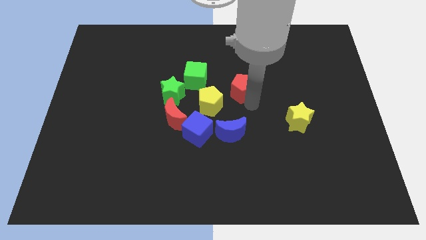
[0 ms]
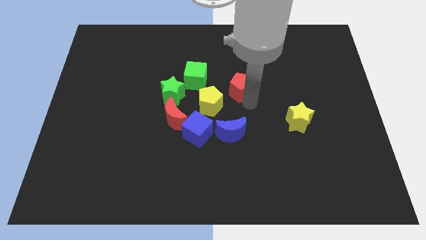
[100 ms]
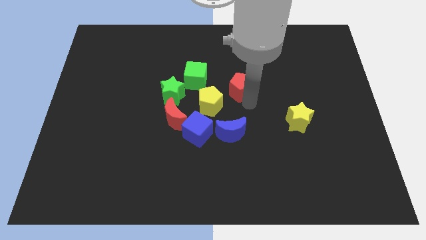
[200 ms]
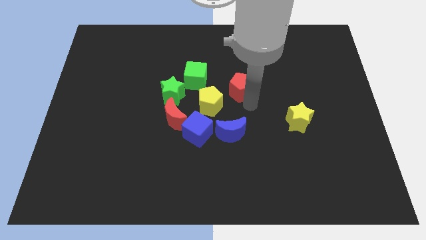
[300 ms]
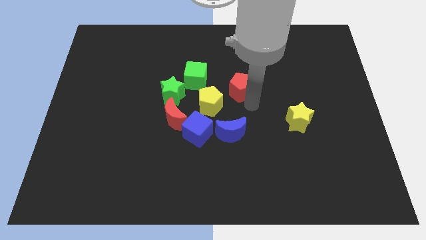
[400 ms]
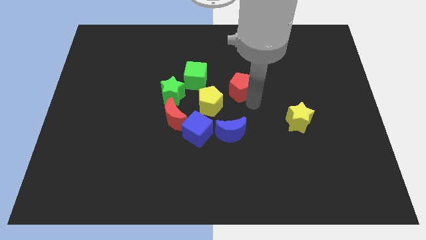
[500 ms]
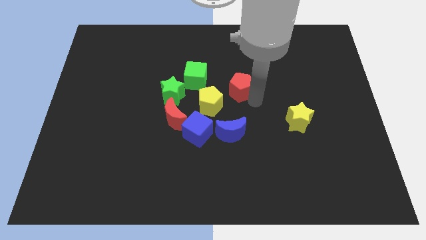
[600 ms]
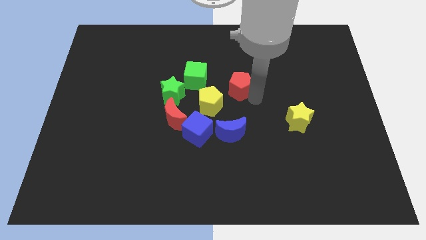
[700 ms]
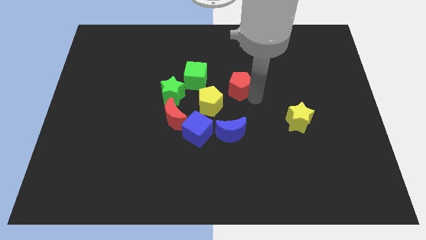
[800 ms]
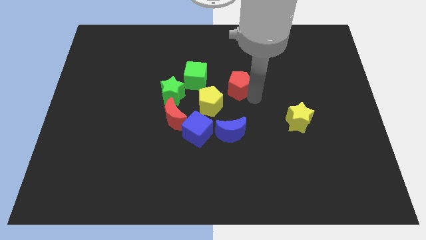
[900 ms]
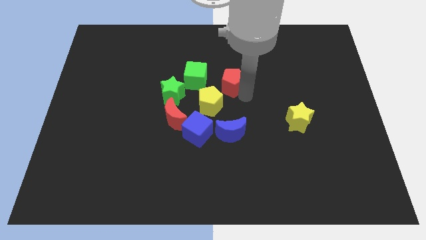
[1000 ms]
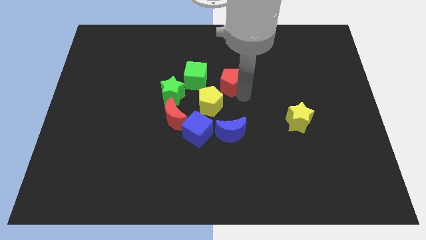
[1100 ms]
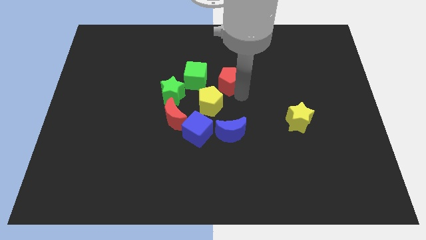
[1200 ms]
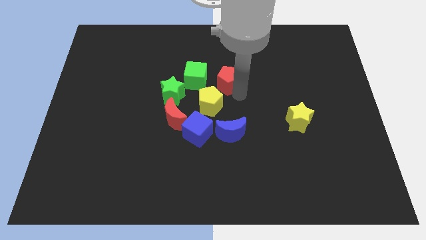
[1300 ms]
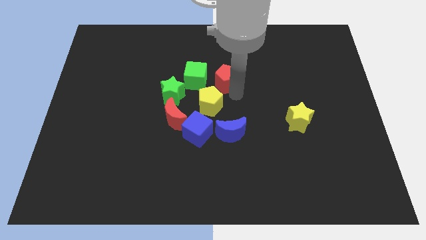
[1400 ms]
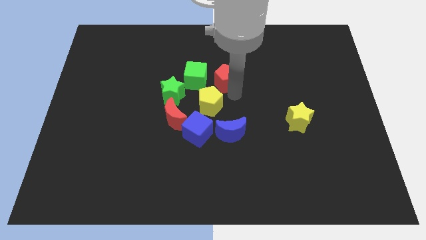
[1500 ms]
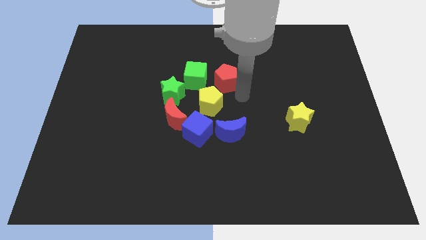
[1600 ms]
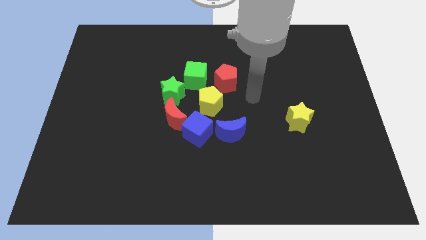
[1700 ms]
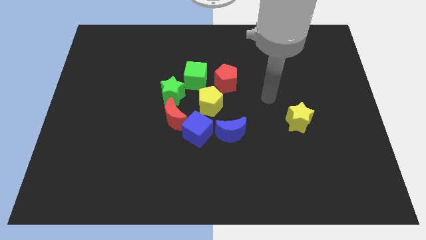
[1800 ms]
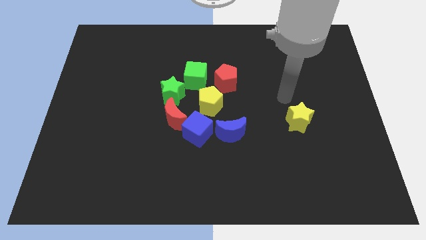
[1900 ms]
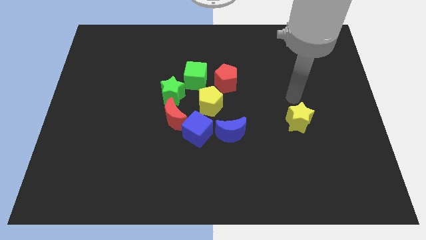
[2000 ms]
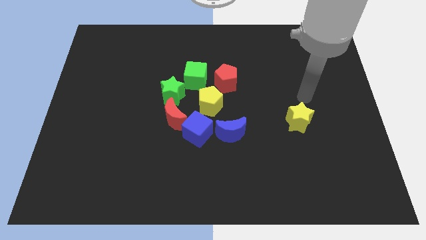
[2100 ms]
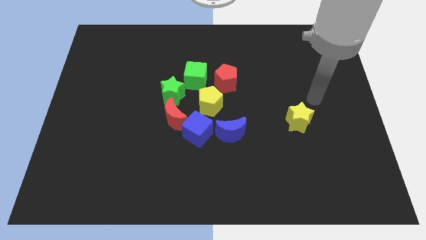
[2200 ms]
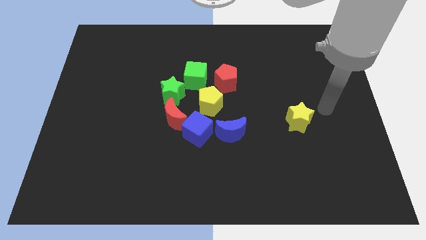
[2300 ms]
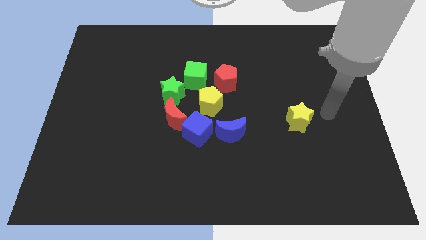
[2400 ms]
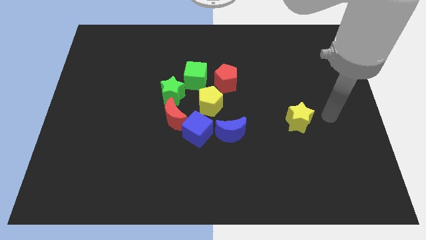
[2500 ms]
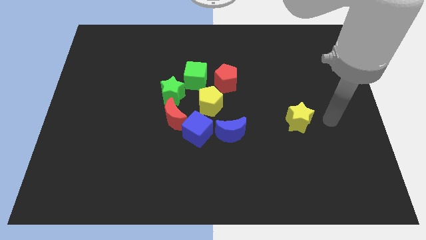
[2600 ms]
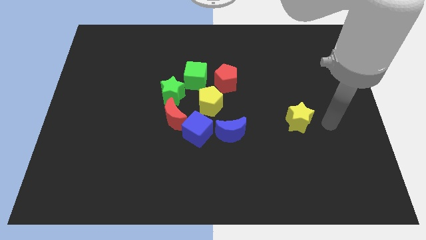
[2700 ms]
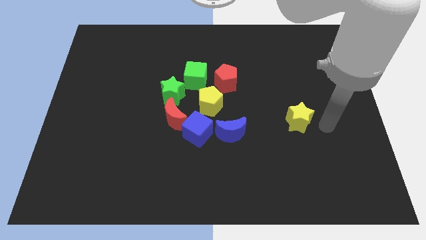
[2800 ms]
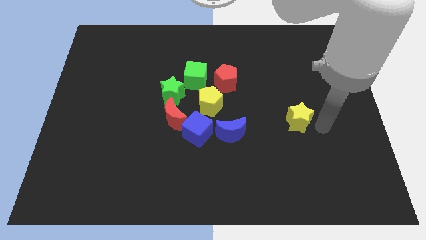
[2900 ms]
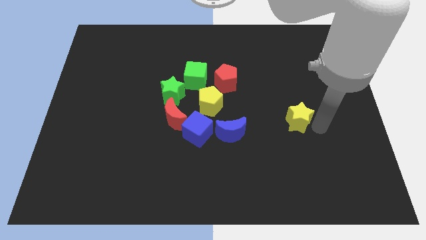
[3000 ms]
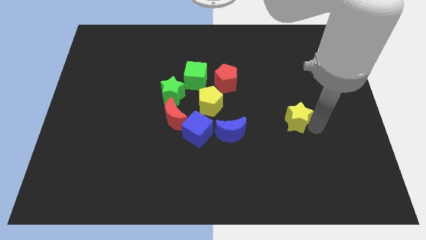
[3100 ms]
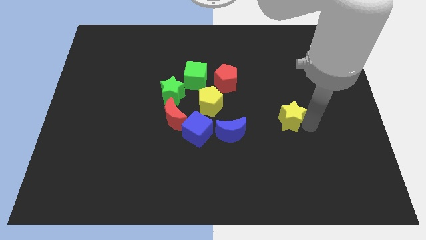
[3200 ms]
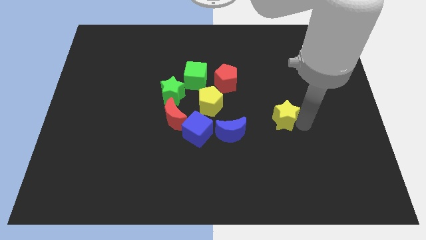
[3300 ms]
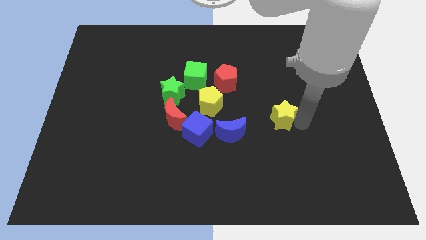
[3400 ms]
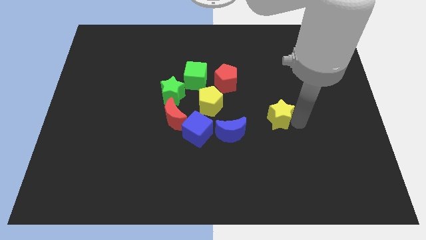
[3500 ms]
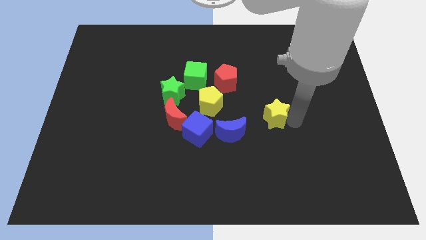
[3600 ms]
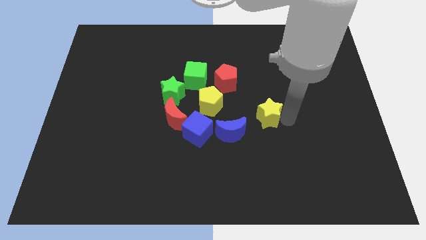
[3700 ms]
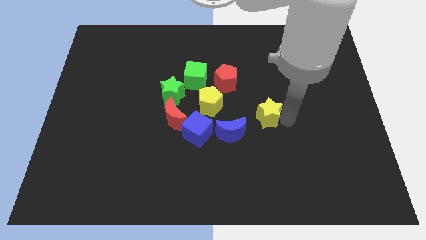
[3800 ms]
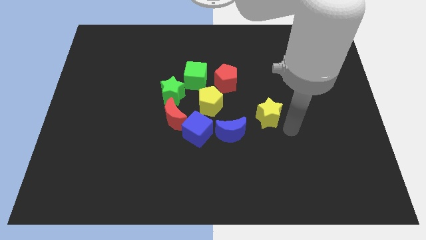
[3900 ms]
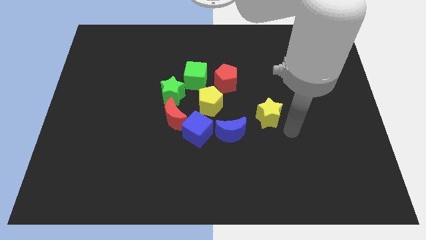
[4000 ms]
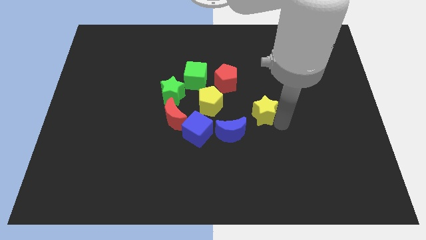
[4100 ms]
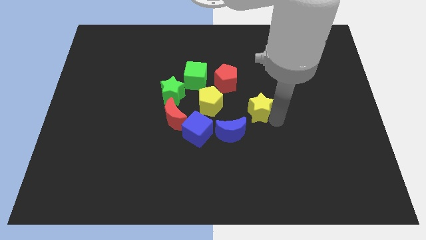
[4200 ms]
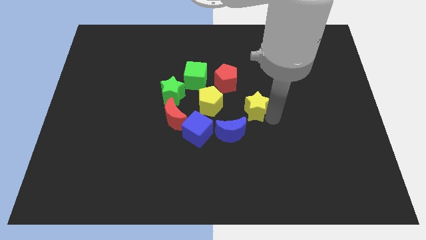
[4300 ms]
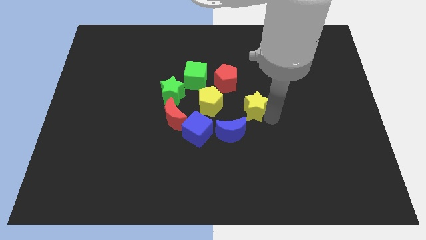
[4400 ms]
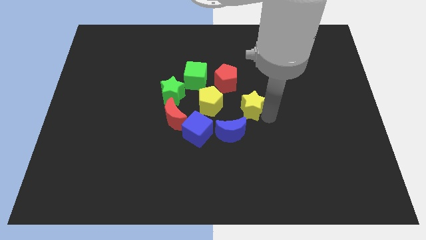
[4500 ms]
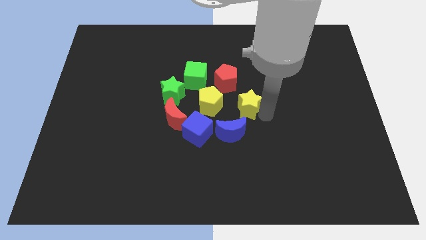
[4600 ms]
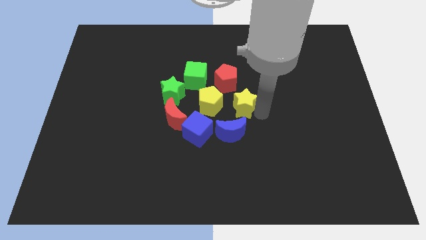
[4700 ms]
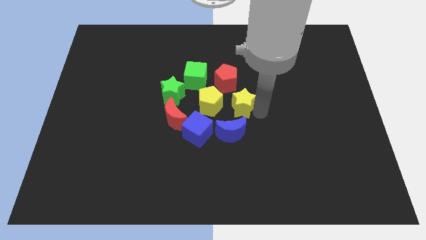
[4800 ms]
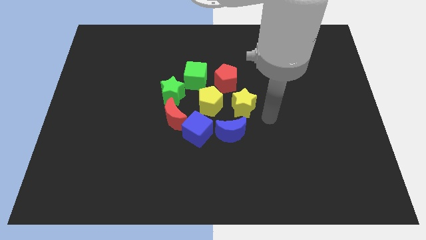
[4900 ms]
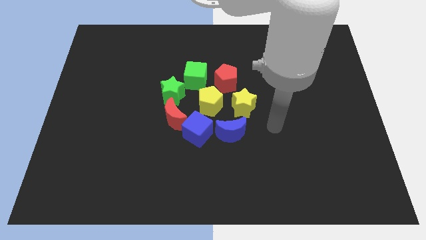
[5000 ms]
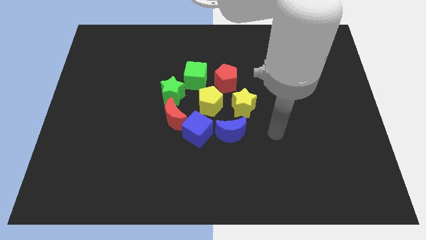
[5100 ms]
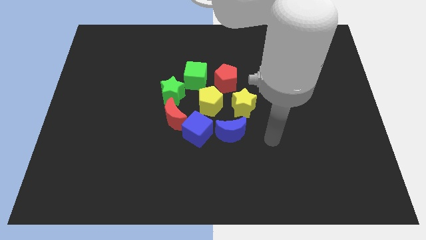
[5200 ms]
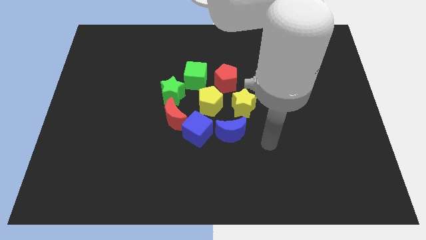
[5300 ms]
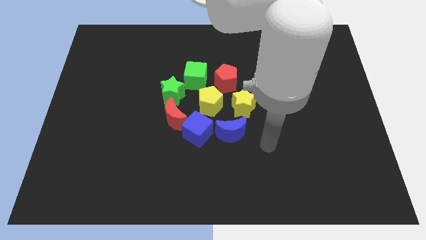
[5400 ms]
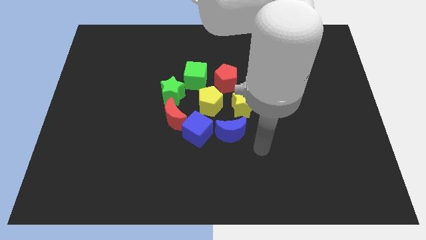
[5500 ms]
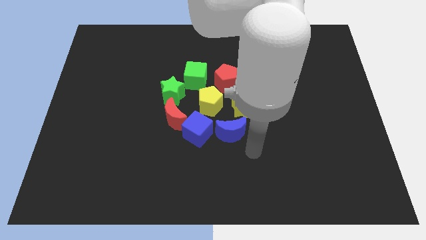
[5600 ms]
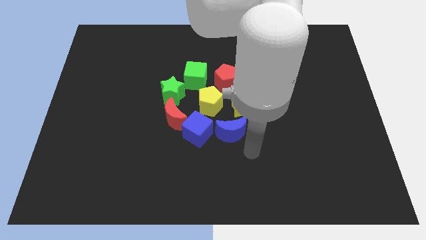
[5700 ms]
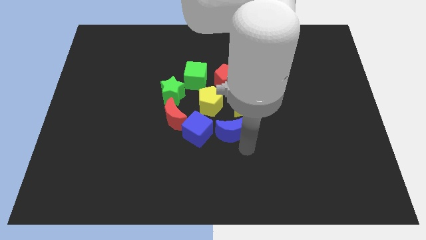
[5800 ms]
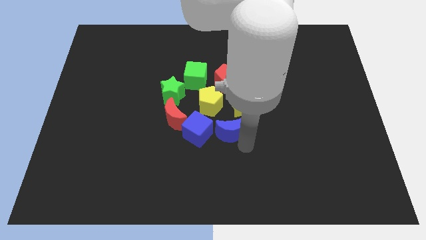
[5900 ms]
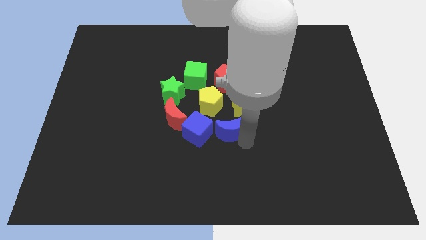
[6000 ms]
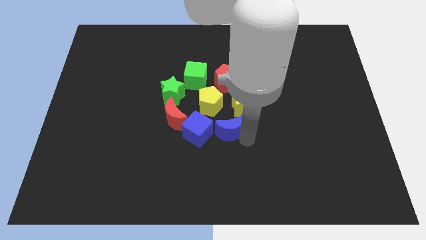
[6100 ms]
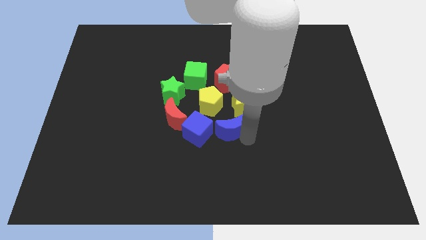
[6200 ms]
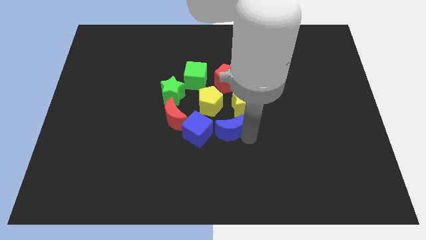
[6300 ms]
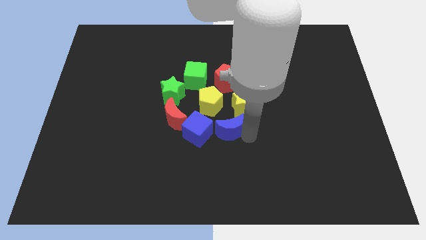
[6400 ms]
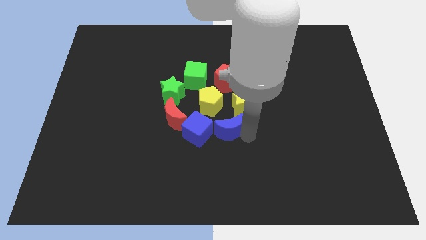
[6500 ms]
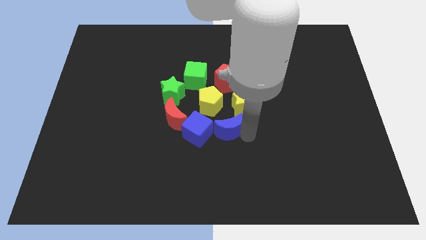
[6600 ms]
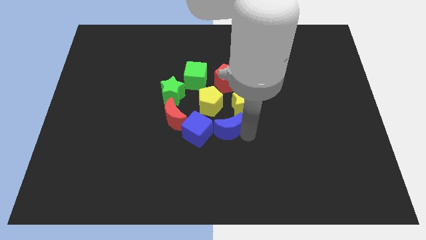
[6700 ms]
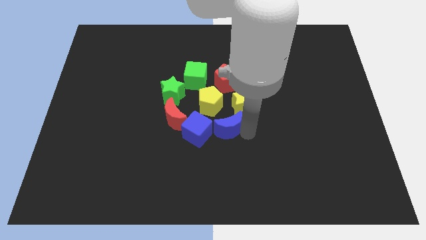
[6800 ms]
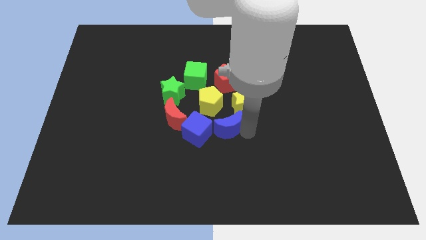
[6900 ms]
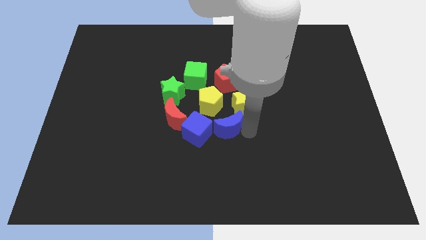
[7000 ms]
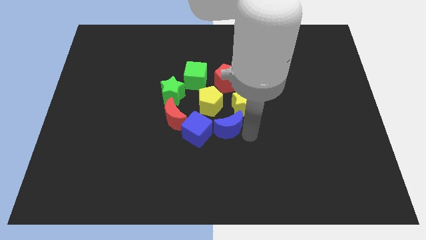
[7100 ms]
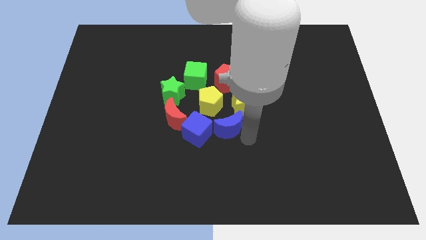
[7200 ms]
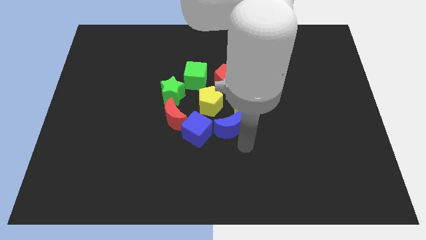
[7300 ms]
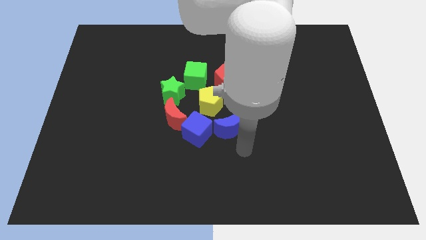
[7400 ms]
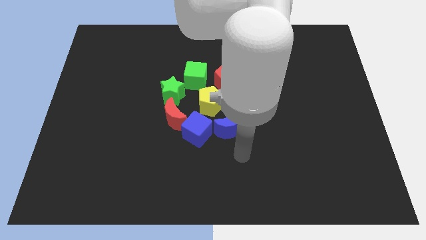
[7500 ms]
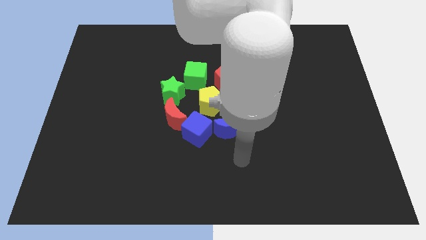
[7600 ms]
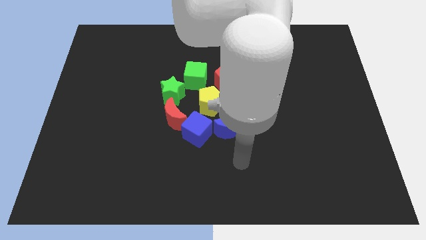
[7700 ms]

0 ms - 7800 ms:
make a circle with all the blocks around the yellow pentagon

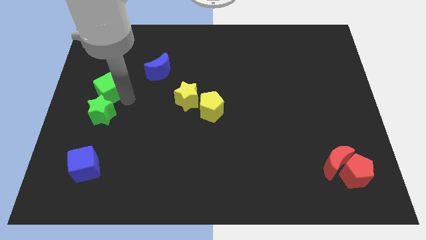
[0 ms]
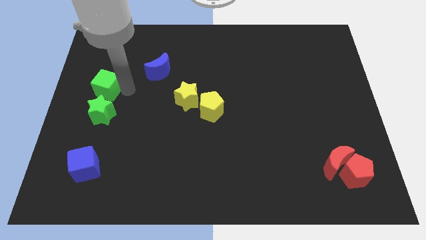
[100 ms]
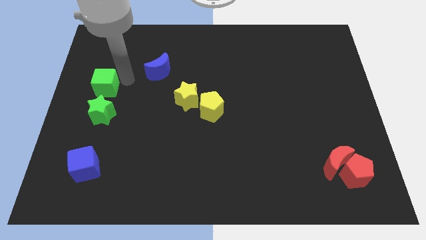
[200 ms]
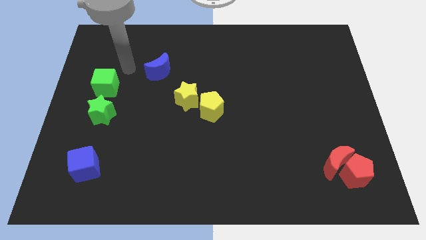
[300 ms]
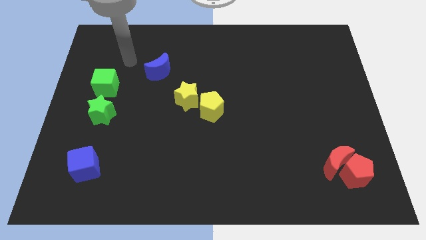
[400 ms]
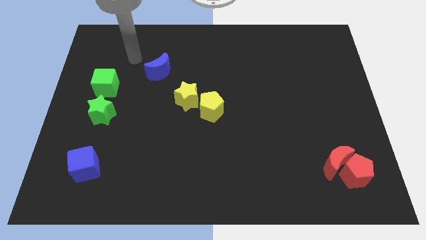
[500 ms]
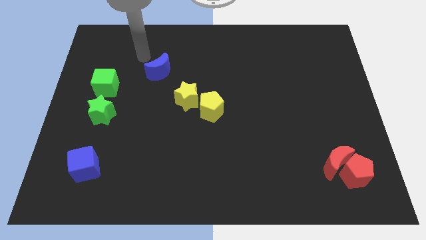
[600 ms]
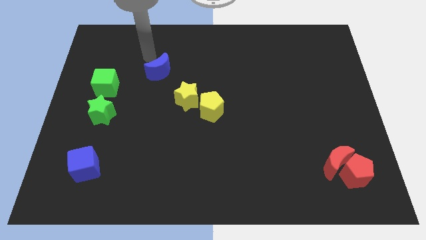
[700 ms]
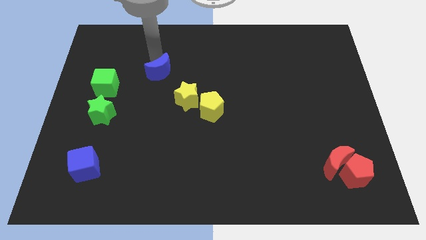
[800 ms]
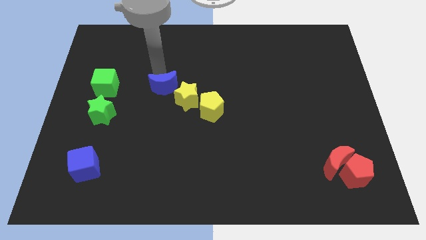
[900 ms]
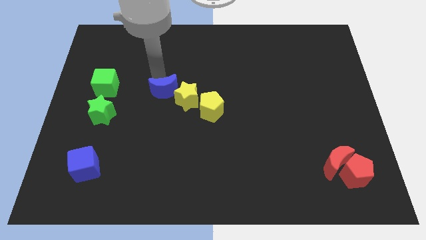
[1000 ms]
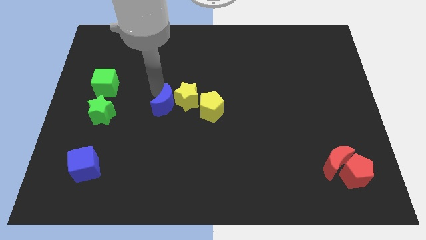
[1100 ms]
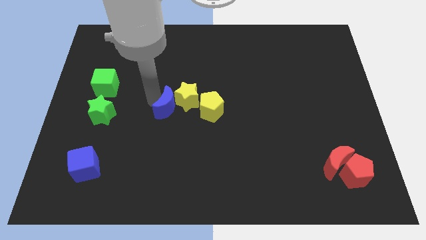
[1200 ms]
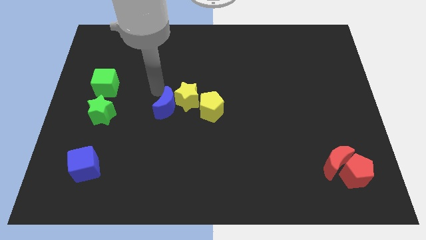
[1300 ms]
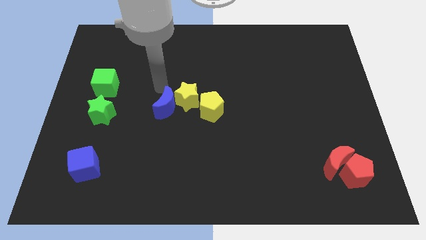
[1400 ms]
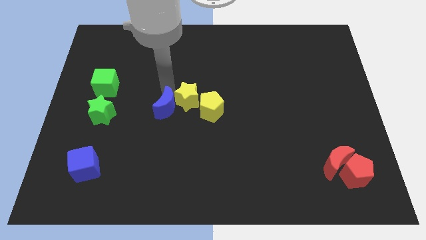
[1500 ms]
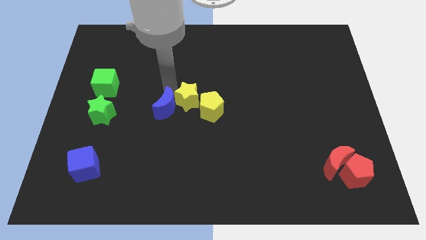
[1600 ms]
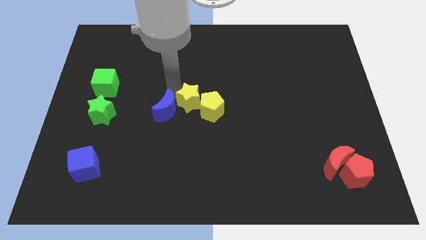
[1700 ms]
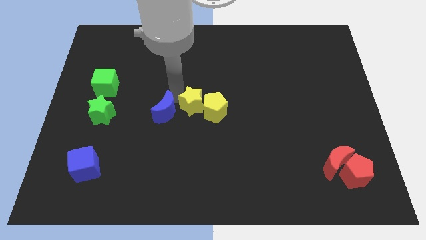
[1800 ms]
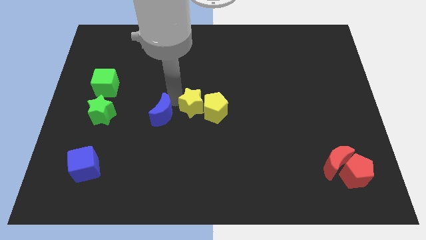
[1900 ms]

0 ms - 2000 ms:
drag the blue crescent diagonal to the blue cube
